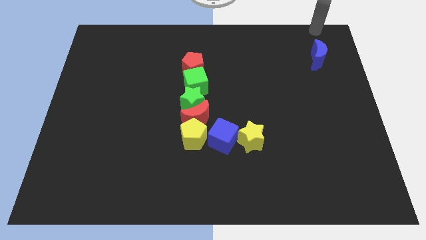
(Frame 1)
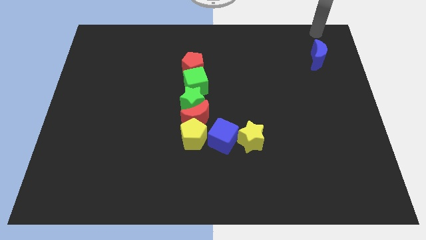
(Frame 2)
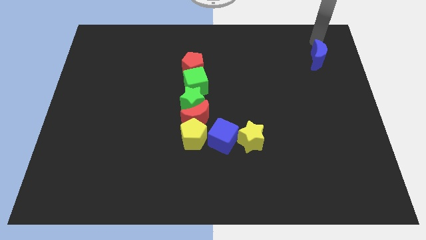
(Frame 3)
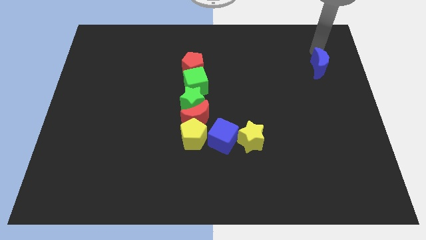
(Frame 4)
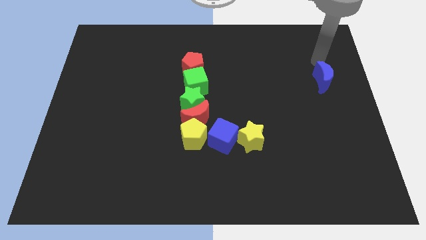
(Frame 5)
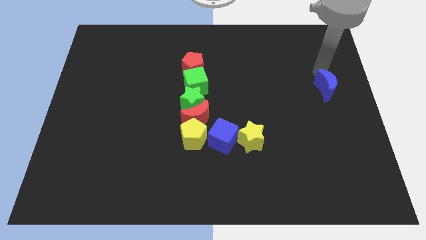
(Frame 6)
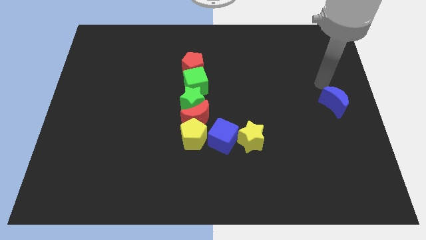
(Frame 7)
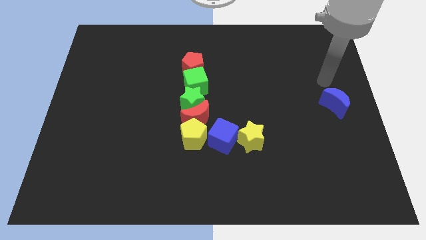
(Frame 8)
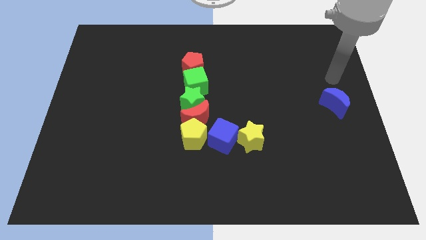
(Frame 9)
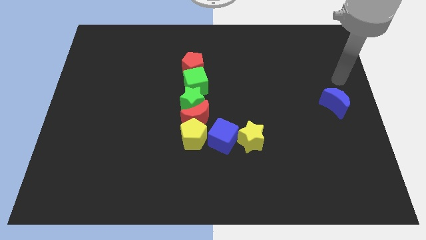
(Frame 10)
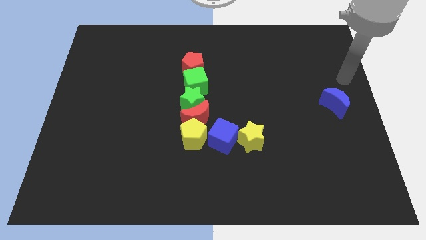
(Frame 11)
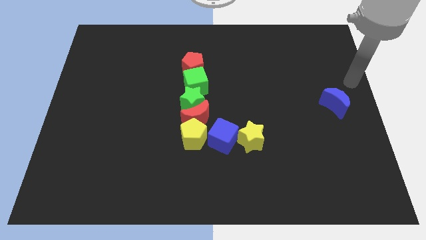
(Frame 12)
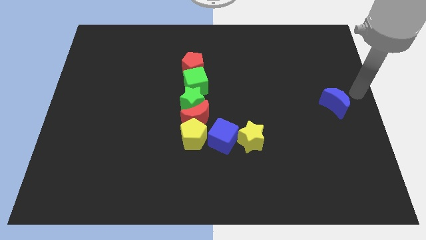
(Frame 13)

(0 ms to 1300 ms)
push the blue moon towards the center right of the board

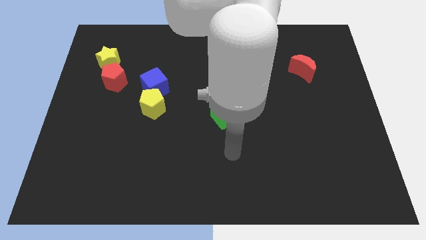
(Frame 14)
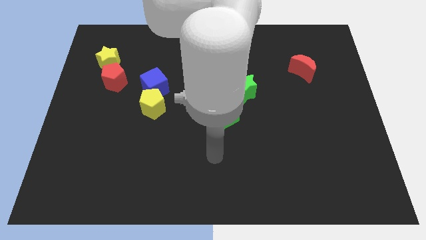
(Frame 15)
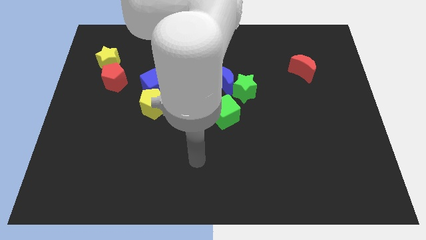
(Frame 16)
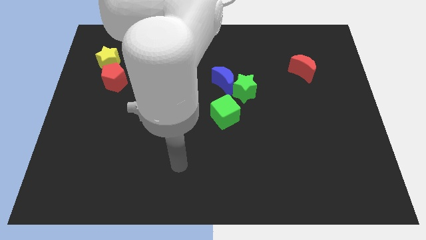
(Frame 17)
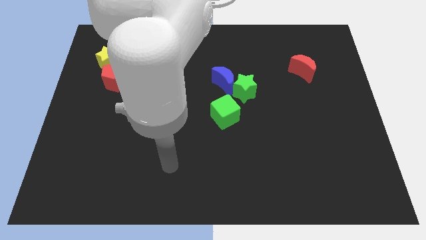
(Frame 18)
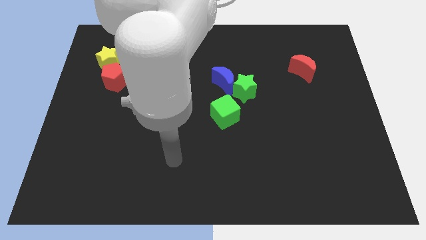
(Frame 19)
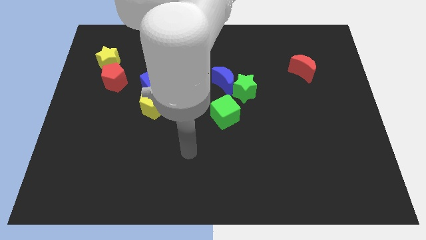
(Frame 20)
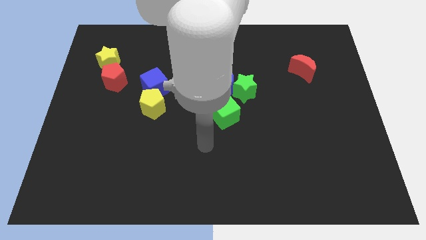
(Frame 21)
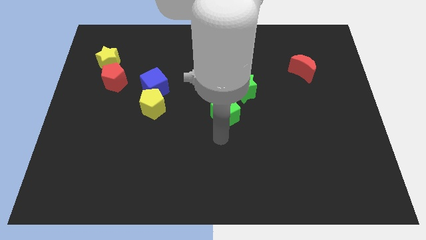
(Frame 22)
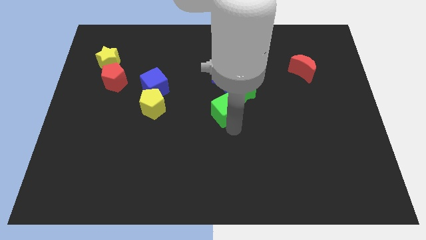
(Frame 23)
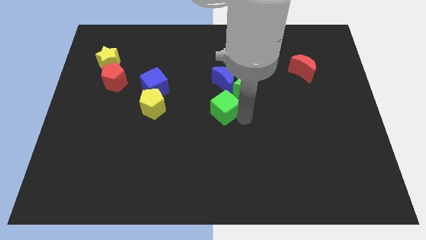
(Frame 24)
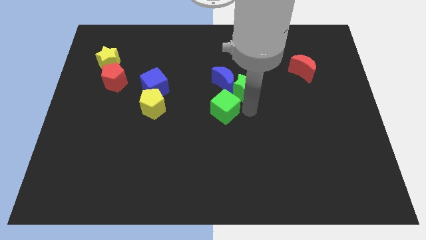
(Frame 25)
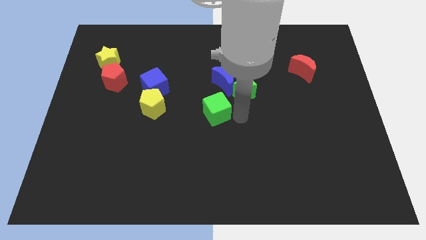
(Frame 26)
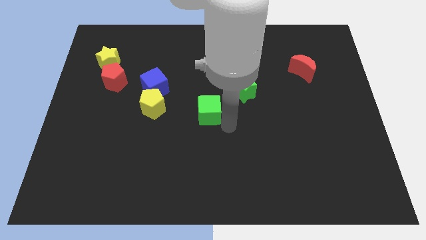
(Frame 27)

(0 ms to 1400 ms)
slide the green cube slightly to the left

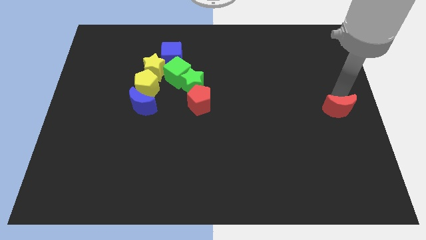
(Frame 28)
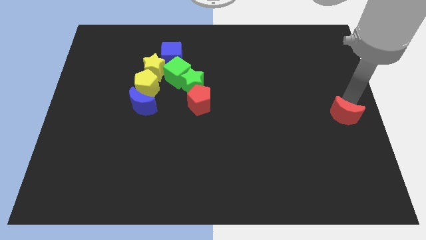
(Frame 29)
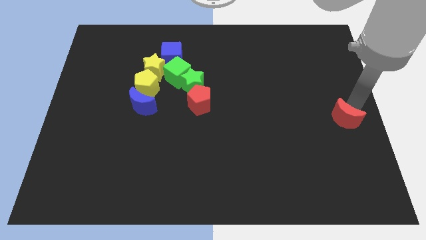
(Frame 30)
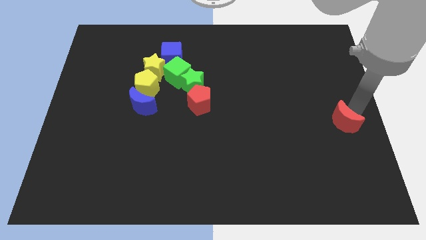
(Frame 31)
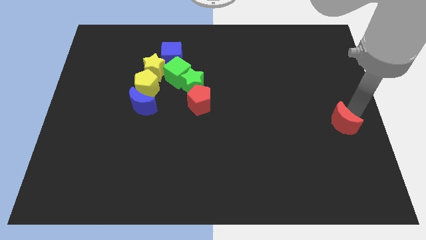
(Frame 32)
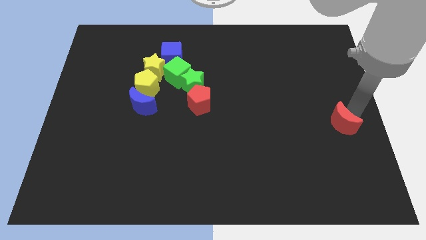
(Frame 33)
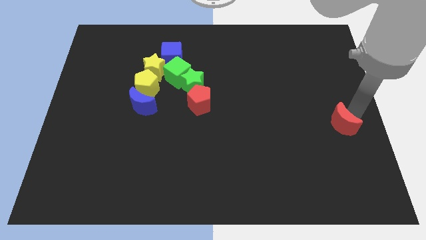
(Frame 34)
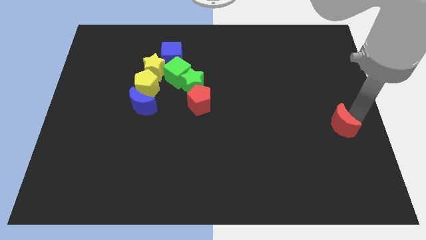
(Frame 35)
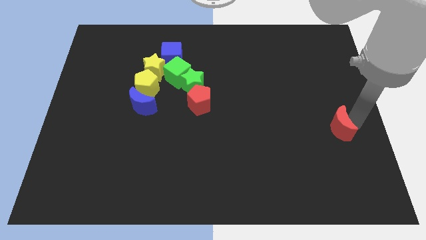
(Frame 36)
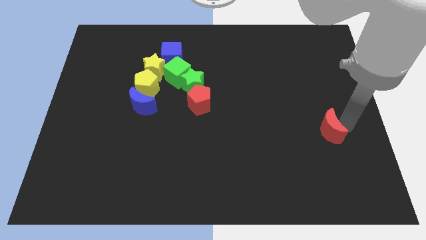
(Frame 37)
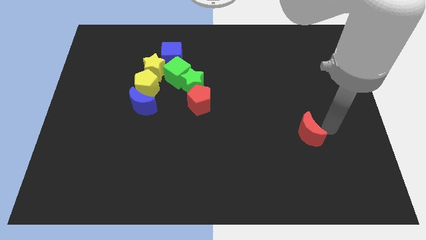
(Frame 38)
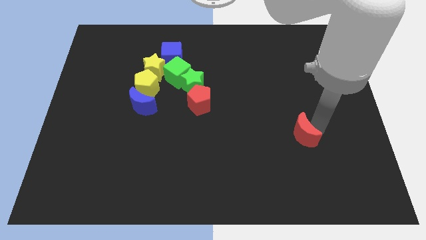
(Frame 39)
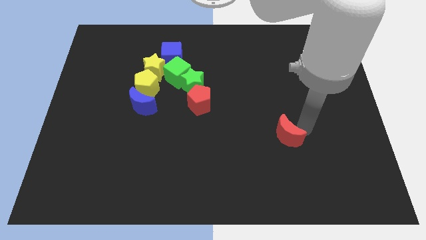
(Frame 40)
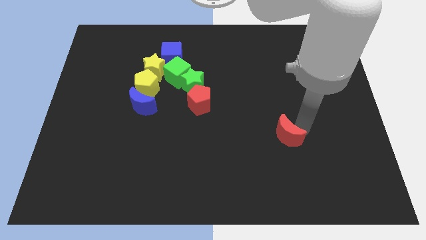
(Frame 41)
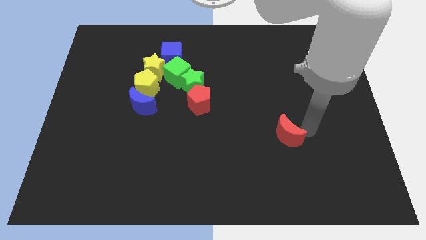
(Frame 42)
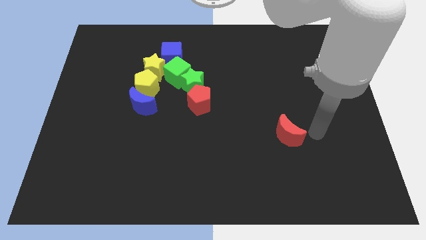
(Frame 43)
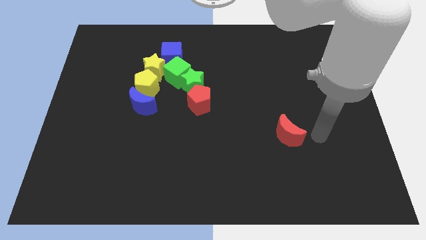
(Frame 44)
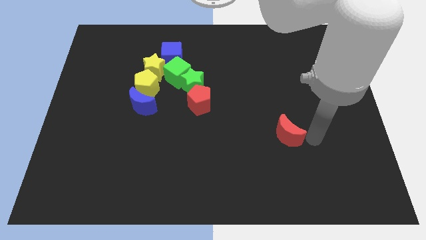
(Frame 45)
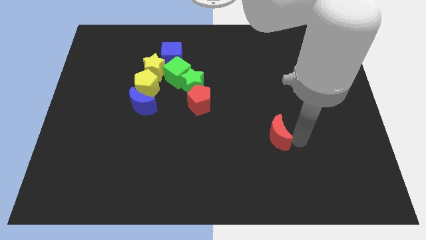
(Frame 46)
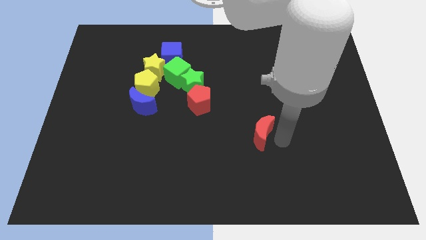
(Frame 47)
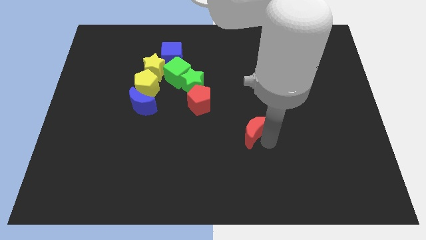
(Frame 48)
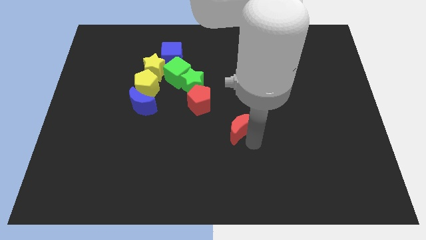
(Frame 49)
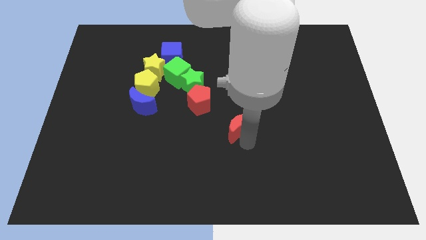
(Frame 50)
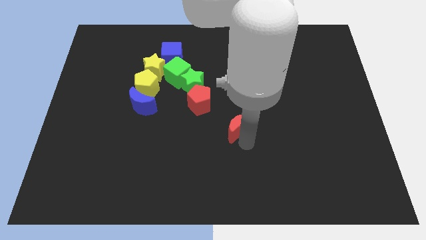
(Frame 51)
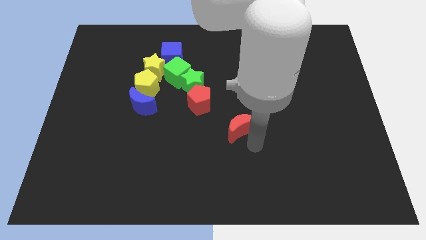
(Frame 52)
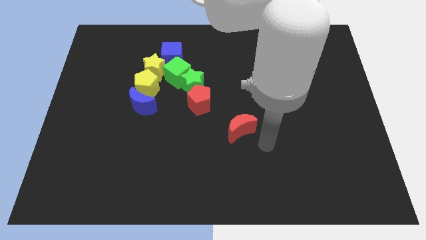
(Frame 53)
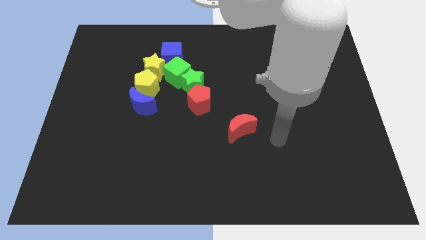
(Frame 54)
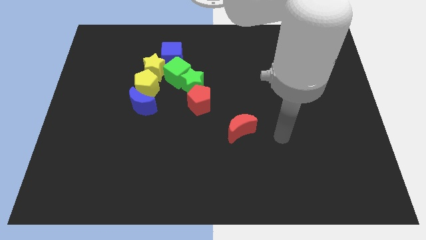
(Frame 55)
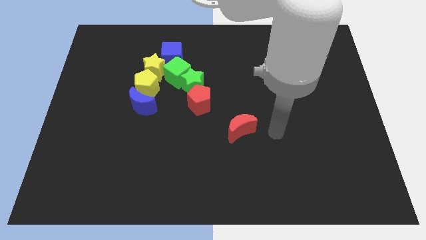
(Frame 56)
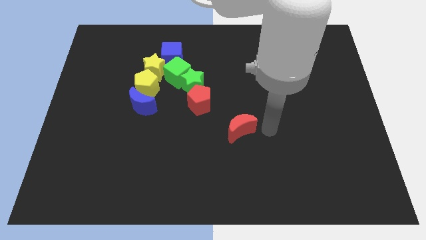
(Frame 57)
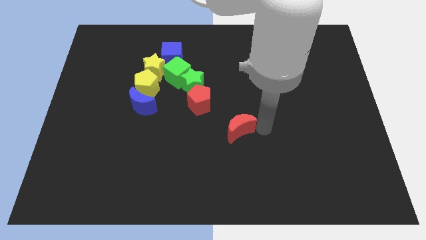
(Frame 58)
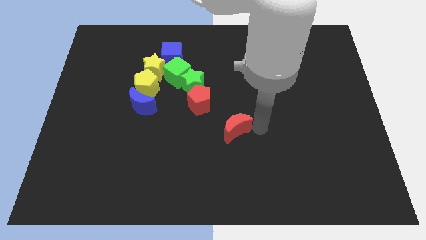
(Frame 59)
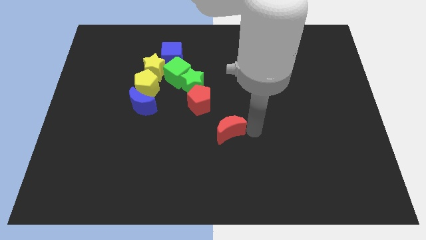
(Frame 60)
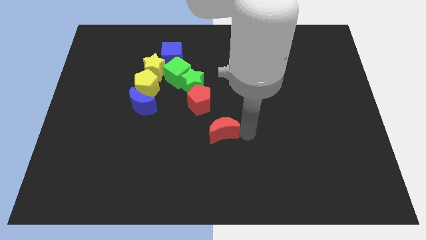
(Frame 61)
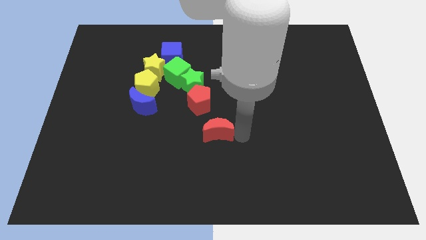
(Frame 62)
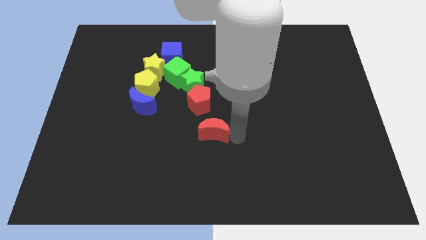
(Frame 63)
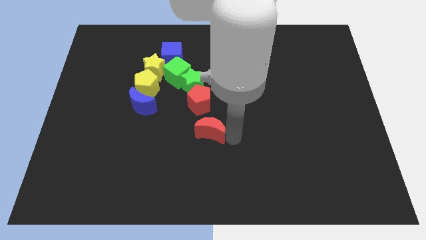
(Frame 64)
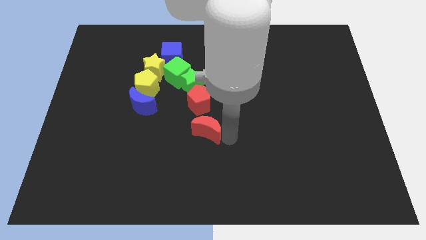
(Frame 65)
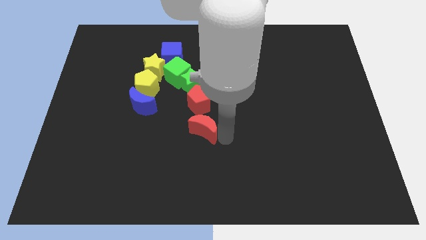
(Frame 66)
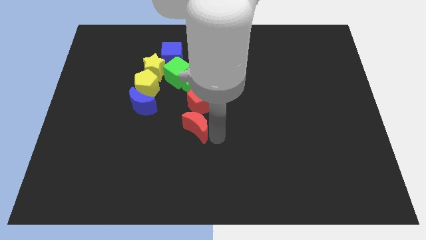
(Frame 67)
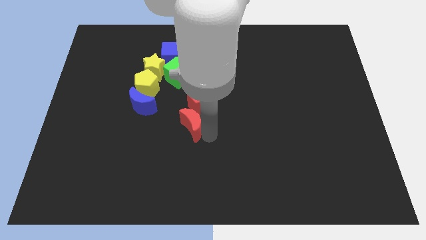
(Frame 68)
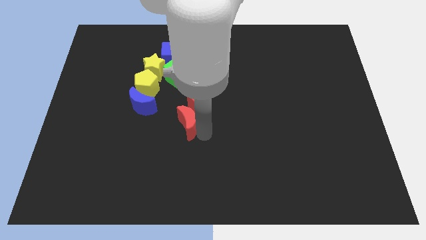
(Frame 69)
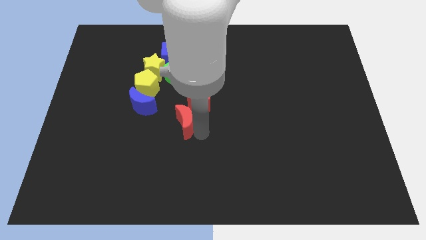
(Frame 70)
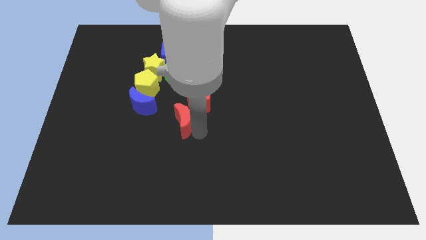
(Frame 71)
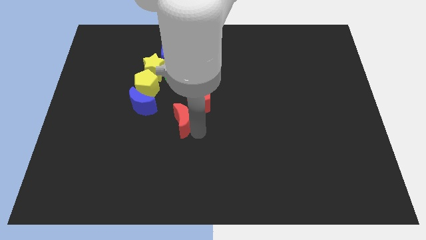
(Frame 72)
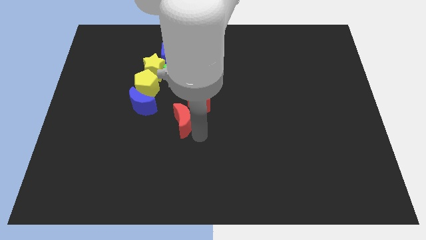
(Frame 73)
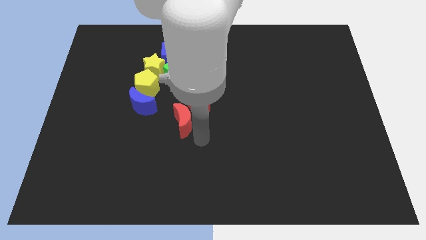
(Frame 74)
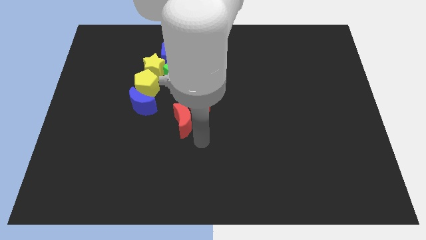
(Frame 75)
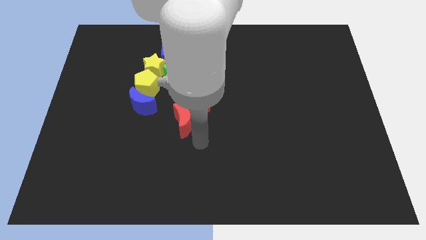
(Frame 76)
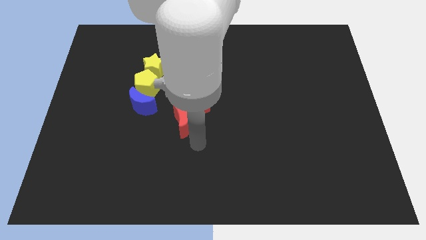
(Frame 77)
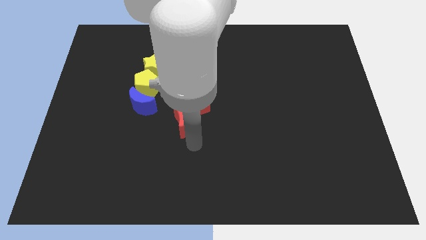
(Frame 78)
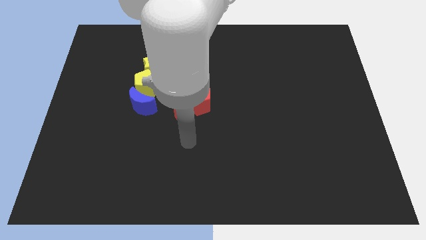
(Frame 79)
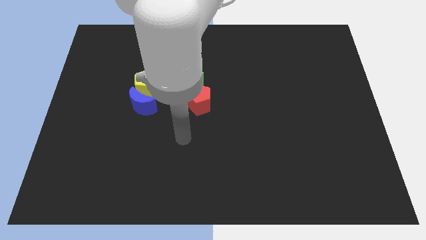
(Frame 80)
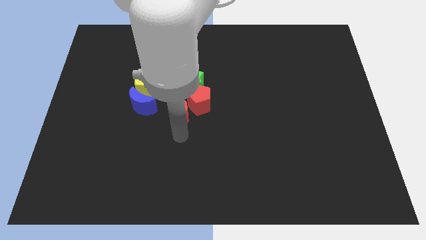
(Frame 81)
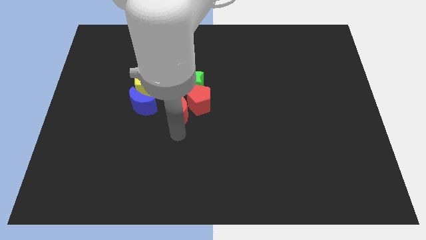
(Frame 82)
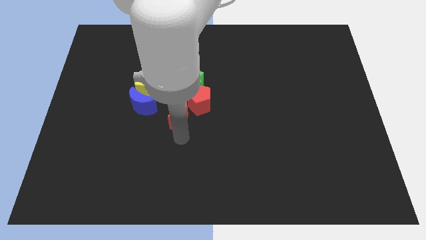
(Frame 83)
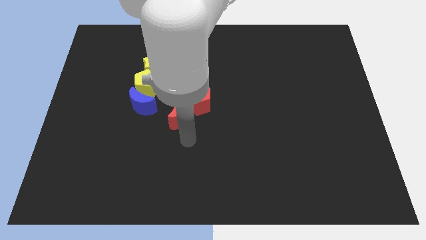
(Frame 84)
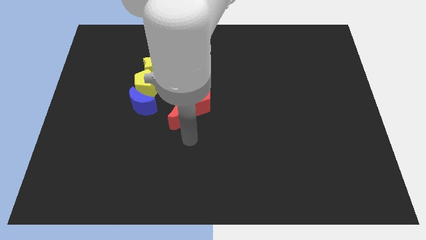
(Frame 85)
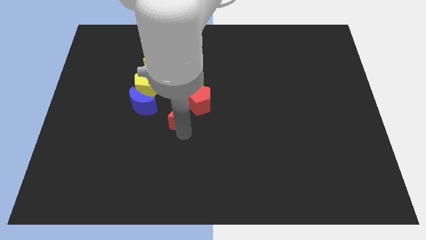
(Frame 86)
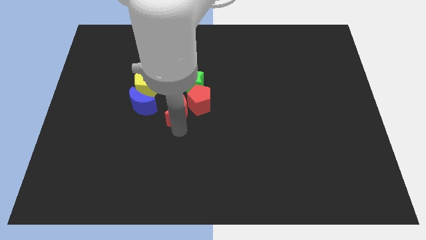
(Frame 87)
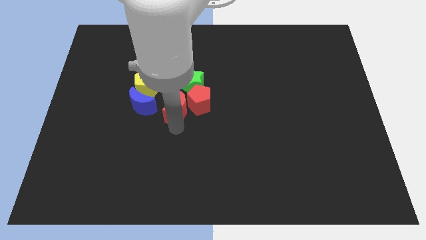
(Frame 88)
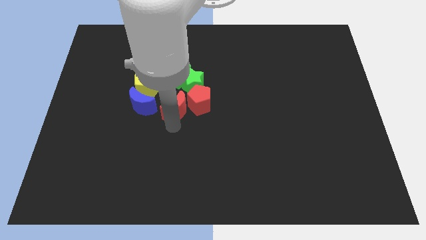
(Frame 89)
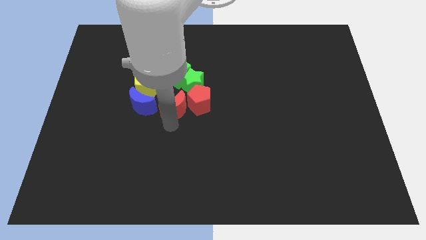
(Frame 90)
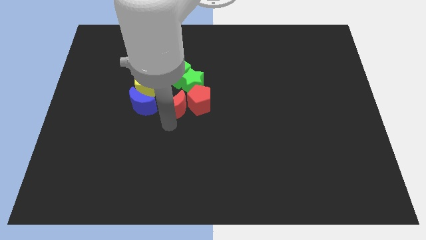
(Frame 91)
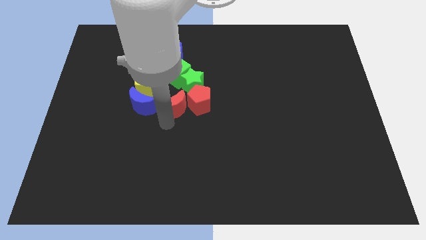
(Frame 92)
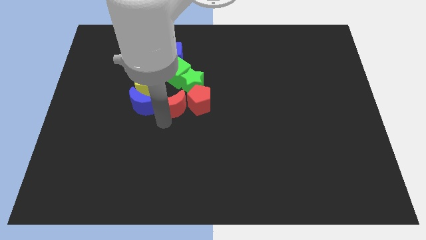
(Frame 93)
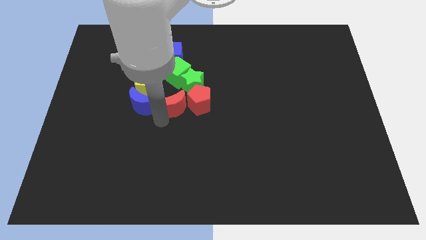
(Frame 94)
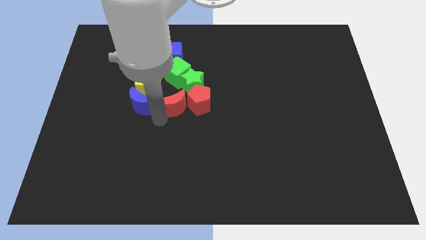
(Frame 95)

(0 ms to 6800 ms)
put the red crescent to the left side of red pentagon
